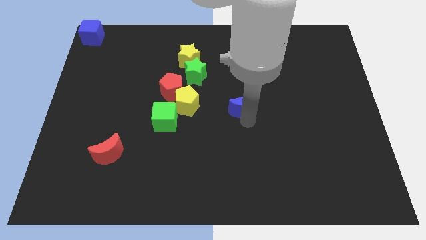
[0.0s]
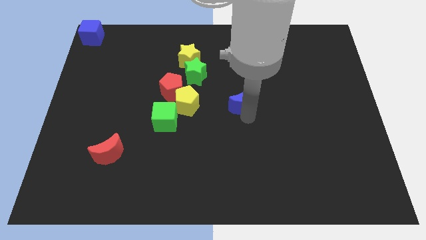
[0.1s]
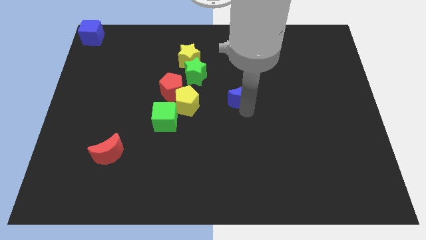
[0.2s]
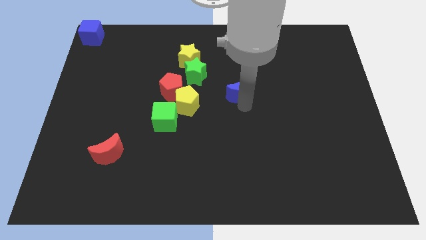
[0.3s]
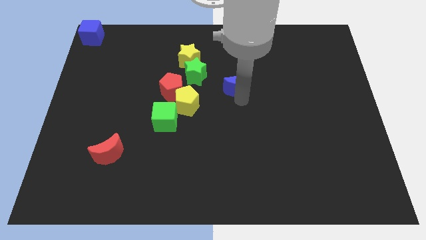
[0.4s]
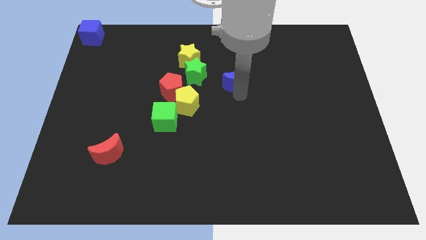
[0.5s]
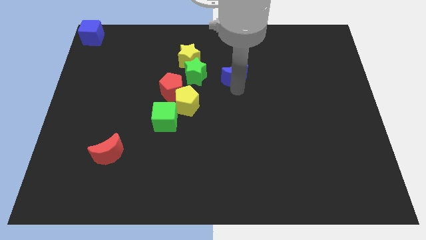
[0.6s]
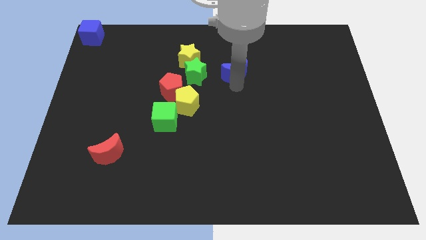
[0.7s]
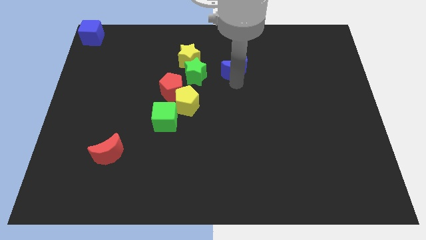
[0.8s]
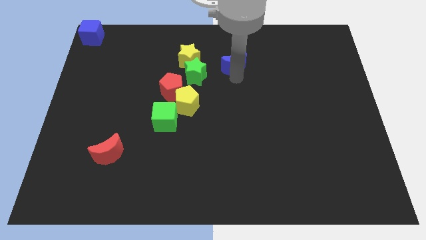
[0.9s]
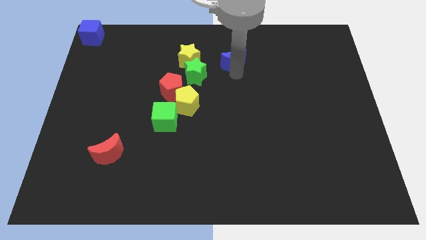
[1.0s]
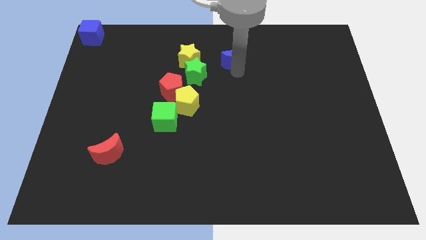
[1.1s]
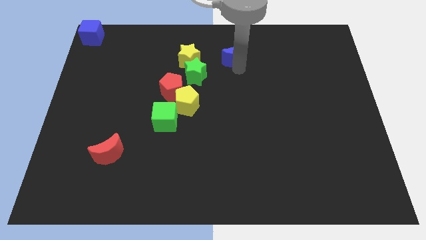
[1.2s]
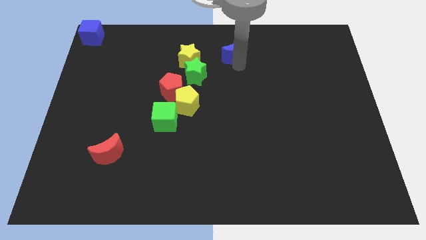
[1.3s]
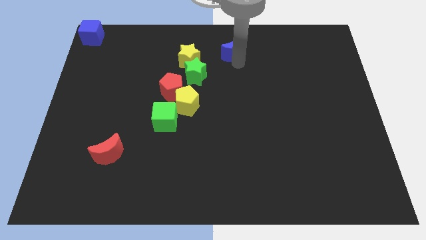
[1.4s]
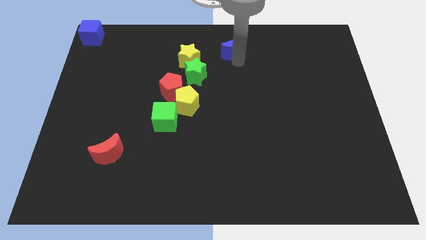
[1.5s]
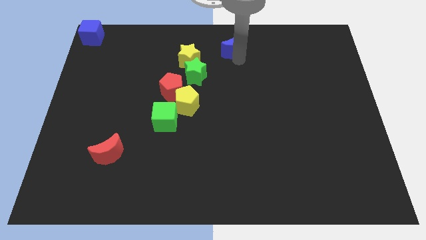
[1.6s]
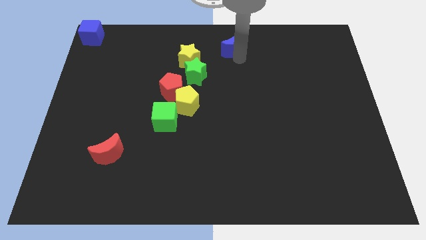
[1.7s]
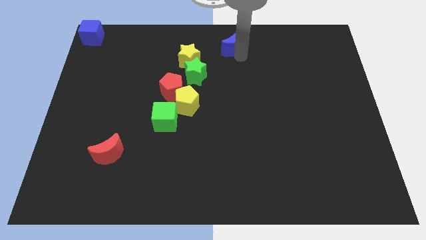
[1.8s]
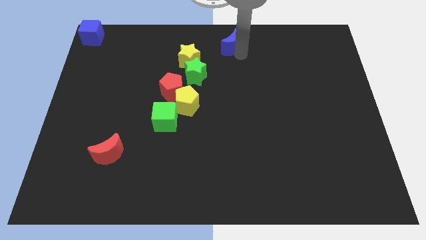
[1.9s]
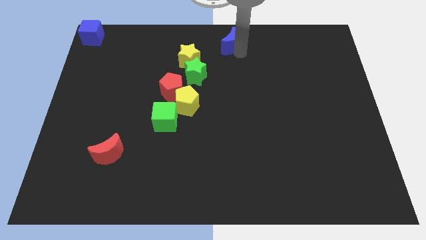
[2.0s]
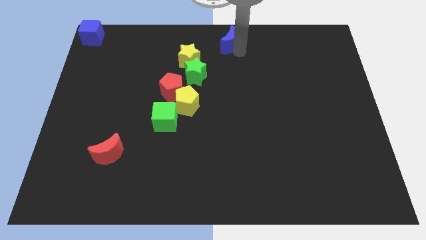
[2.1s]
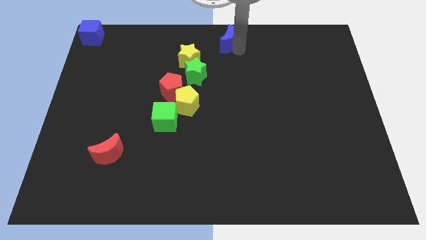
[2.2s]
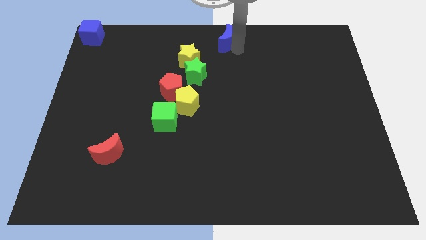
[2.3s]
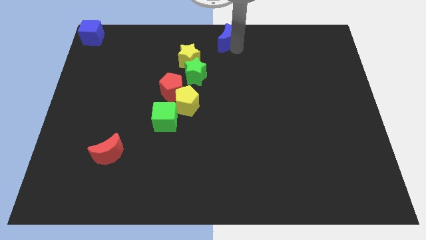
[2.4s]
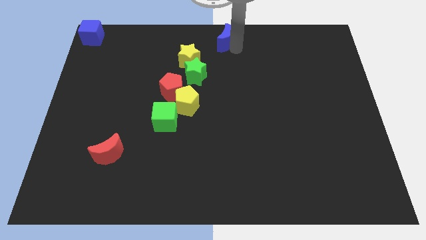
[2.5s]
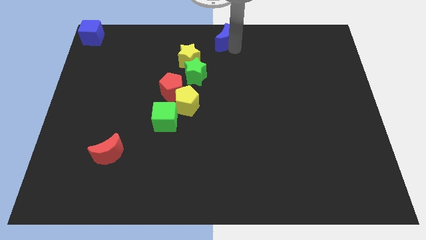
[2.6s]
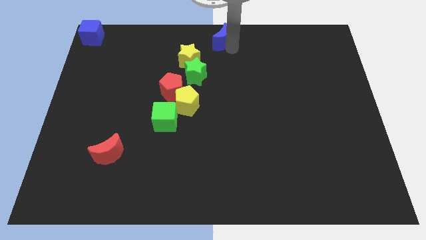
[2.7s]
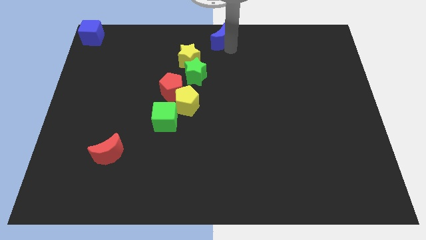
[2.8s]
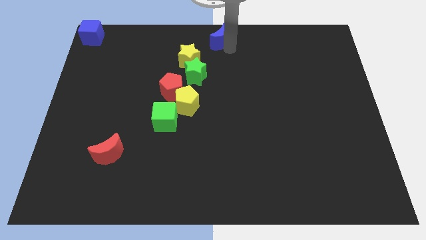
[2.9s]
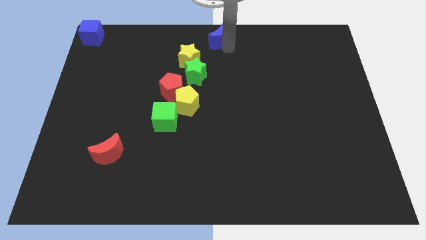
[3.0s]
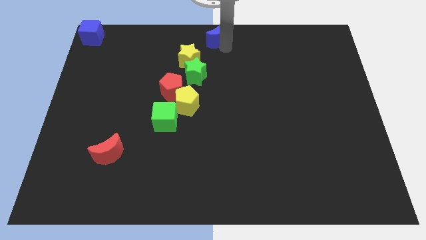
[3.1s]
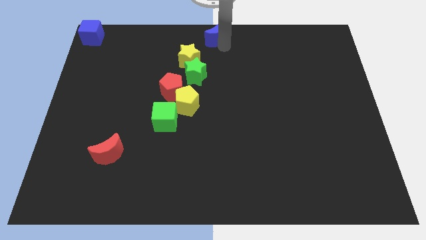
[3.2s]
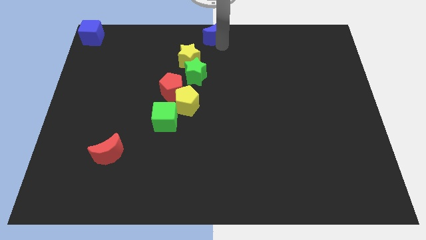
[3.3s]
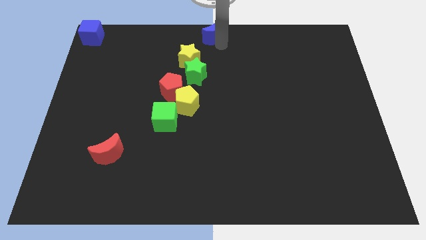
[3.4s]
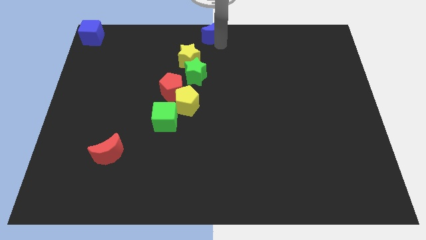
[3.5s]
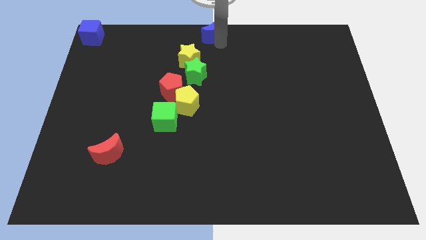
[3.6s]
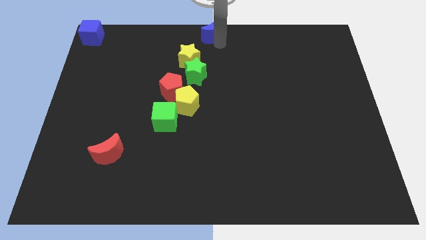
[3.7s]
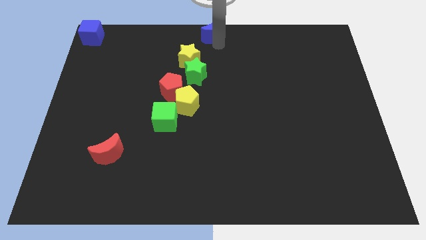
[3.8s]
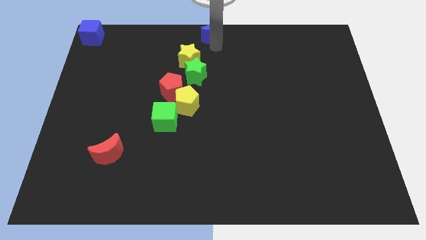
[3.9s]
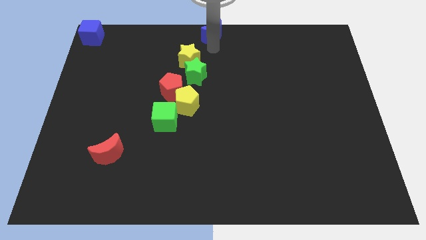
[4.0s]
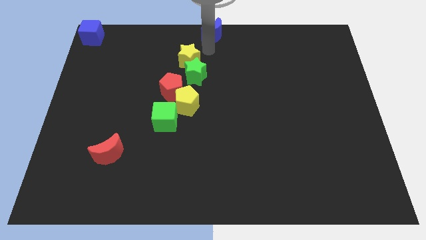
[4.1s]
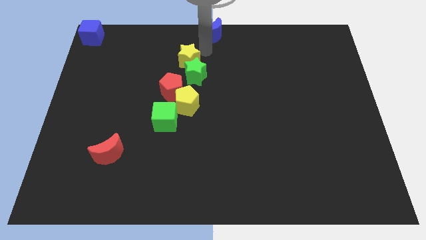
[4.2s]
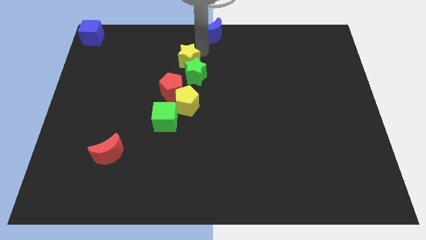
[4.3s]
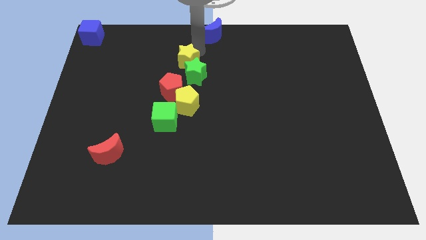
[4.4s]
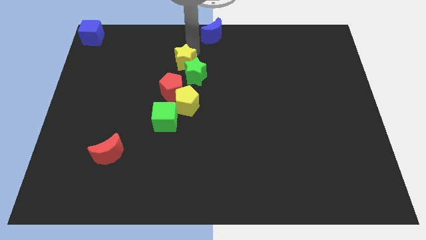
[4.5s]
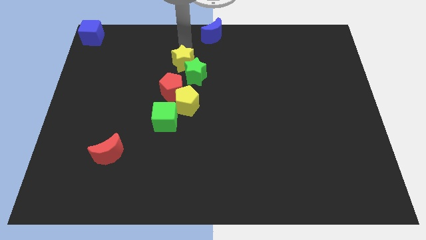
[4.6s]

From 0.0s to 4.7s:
place the arm towards the top centre of the board

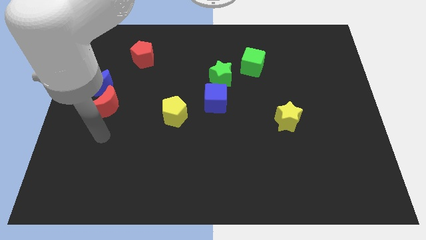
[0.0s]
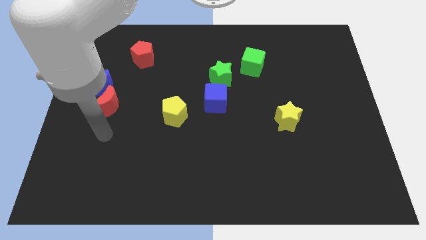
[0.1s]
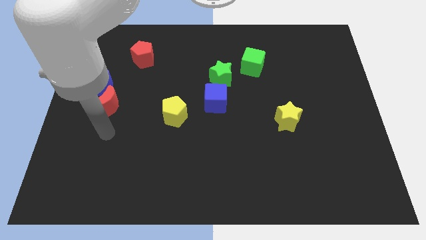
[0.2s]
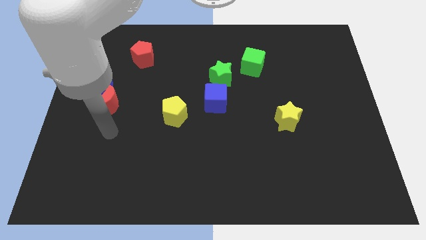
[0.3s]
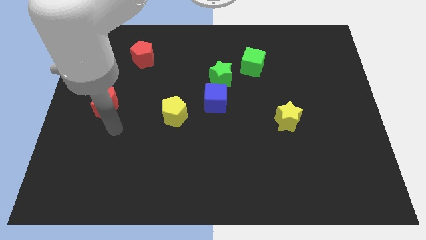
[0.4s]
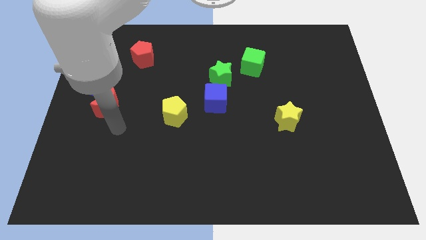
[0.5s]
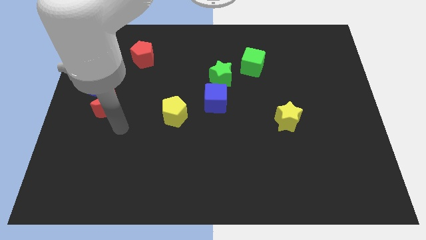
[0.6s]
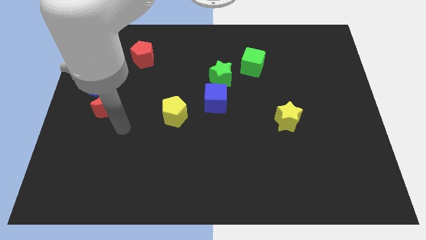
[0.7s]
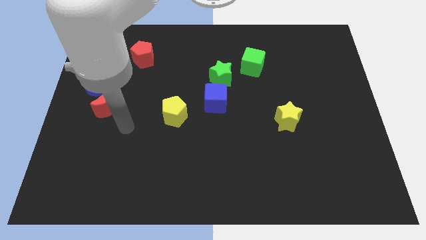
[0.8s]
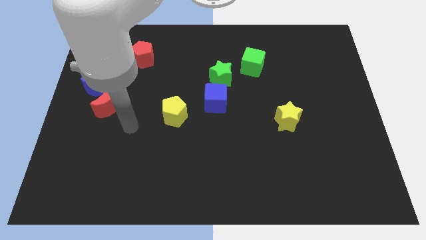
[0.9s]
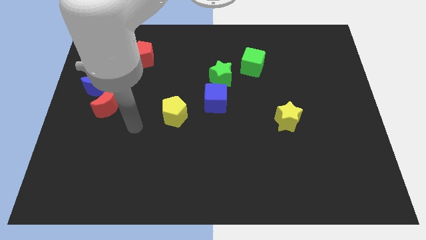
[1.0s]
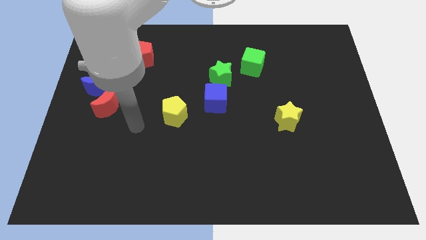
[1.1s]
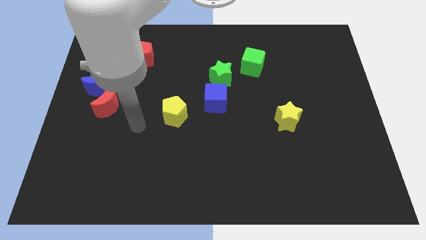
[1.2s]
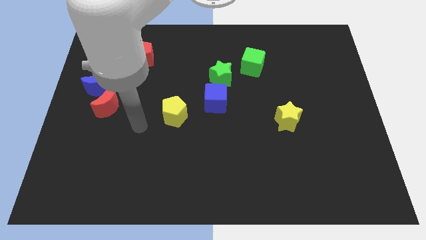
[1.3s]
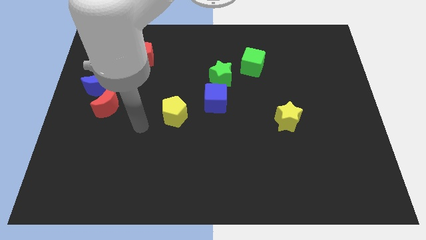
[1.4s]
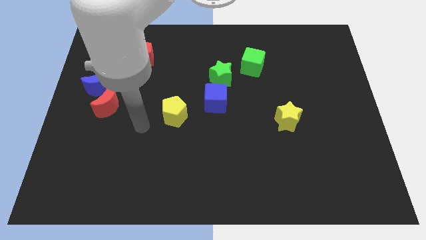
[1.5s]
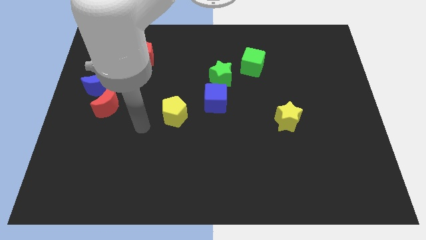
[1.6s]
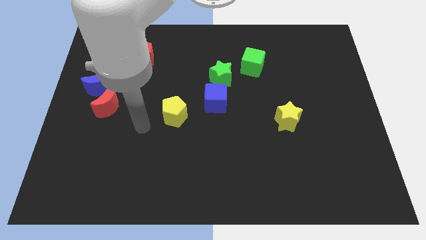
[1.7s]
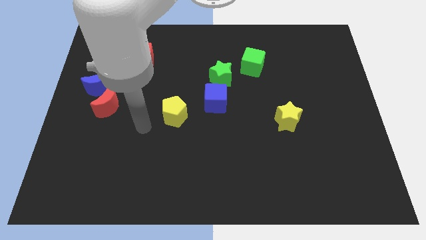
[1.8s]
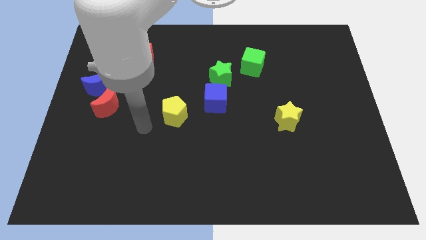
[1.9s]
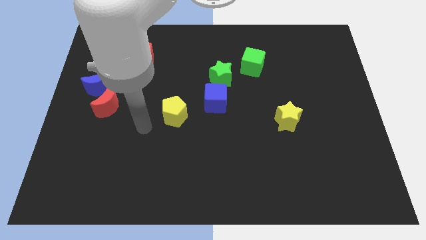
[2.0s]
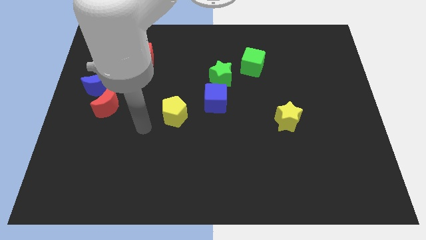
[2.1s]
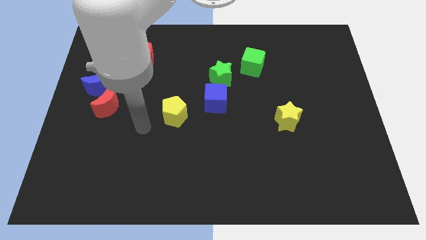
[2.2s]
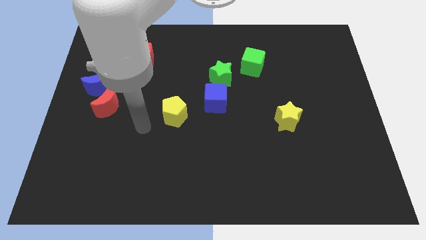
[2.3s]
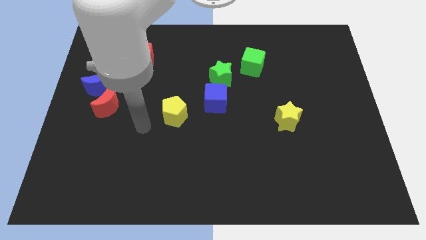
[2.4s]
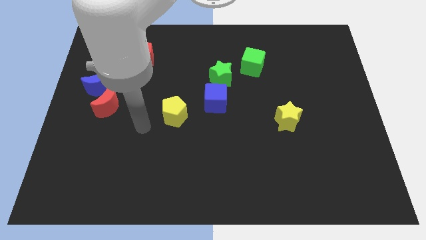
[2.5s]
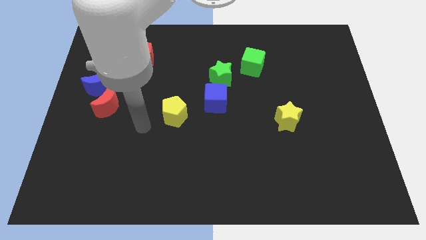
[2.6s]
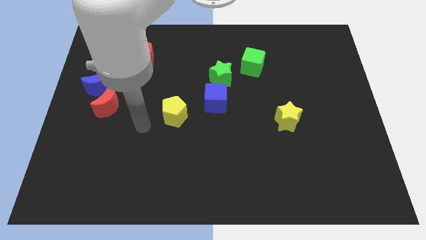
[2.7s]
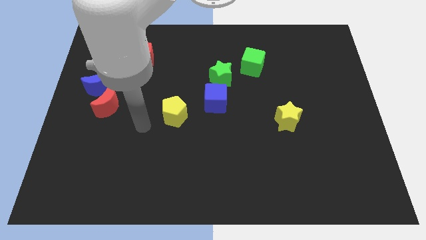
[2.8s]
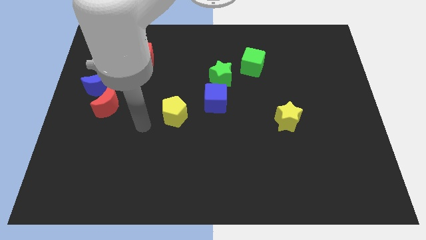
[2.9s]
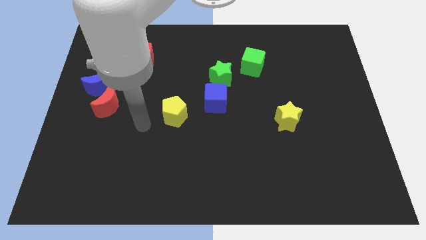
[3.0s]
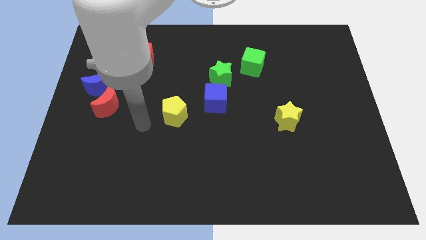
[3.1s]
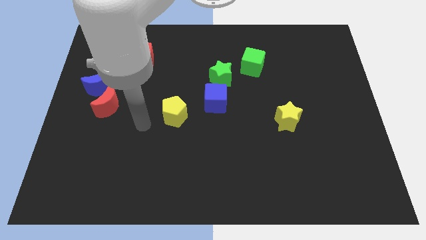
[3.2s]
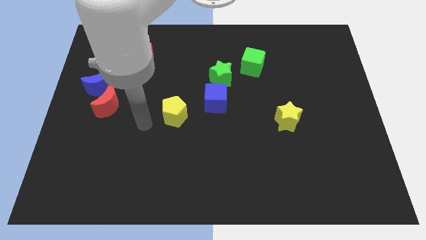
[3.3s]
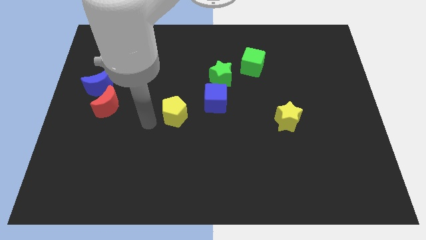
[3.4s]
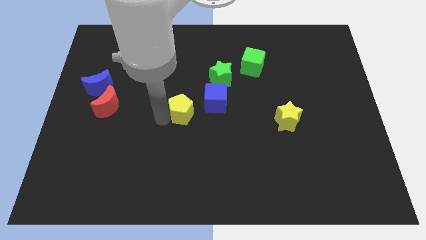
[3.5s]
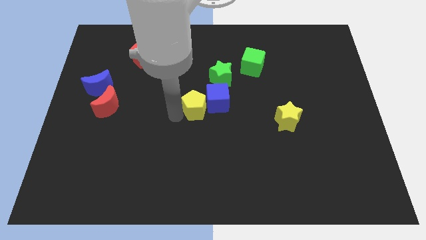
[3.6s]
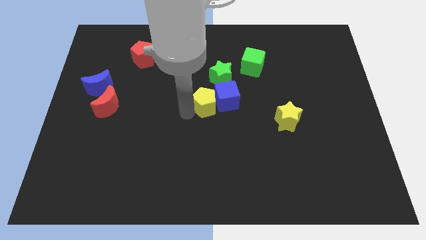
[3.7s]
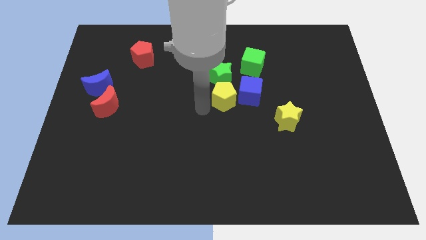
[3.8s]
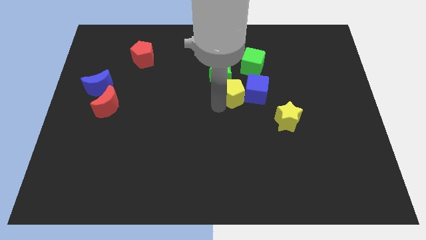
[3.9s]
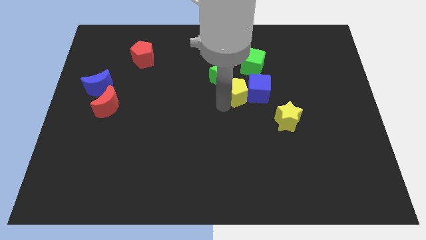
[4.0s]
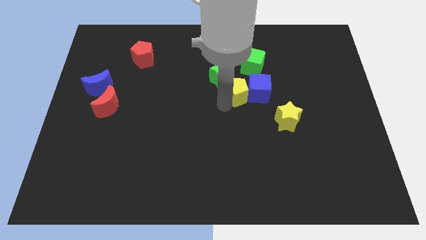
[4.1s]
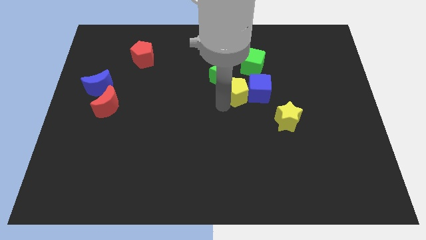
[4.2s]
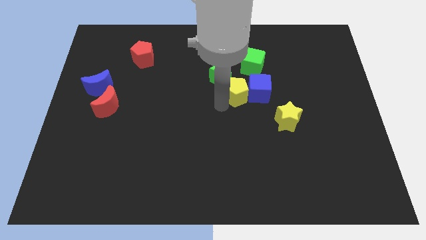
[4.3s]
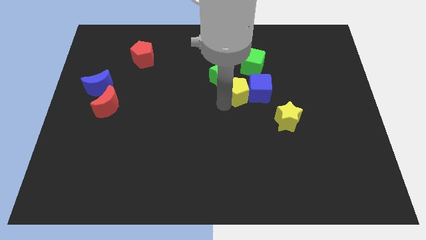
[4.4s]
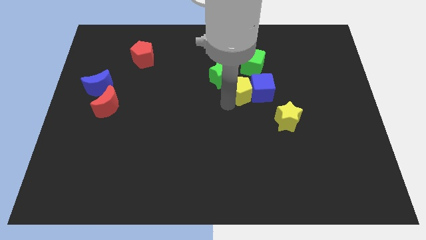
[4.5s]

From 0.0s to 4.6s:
move the yellow pentagon to the left of the blue cube
